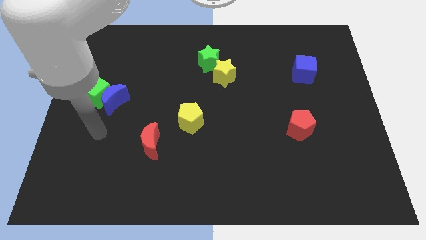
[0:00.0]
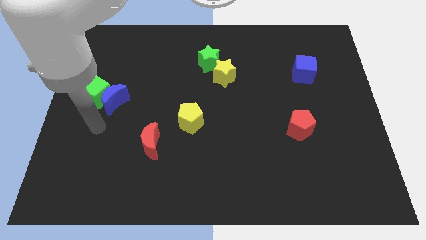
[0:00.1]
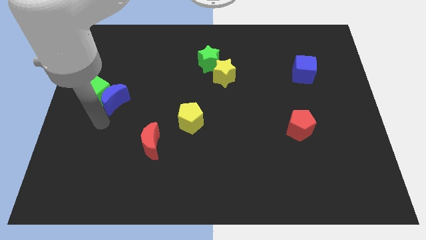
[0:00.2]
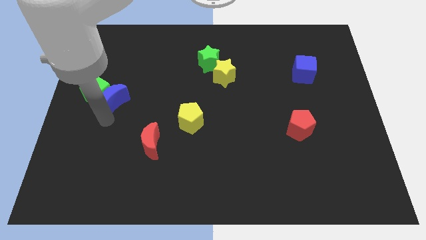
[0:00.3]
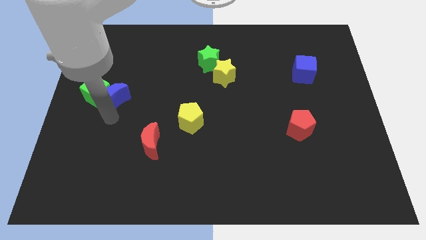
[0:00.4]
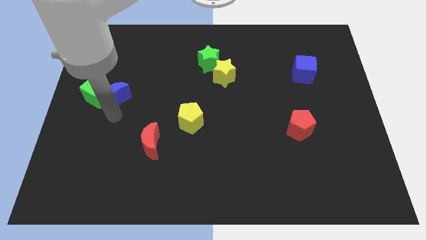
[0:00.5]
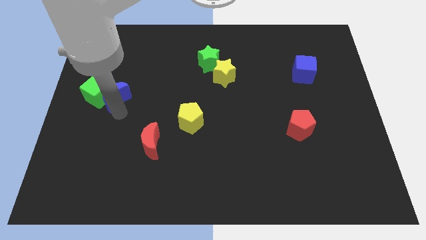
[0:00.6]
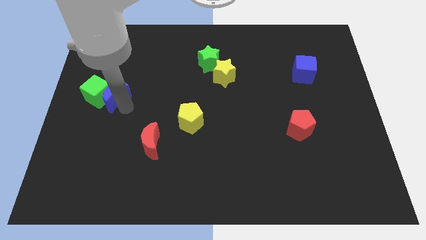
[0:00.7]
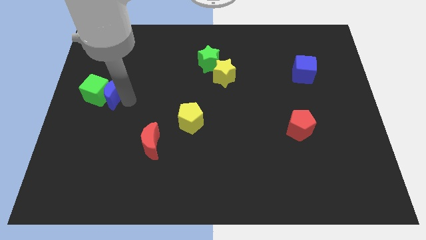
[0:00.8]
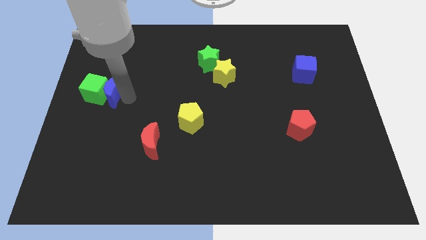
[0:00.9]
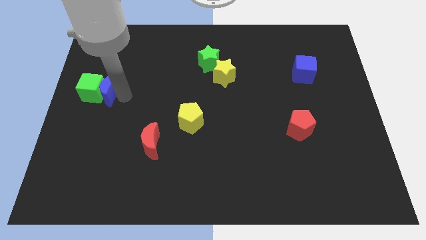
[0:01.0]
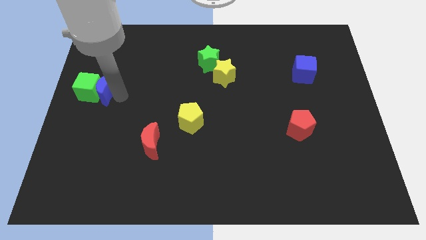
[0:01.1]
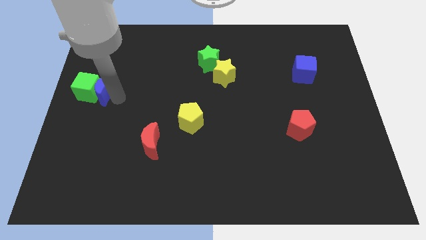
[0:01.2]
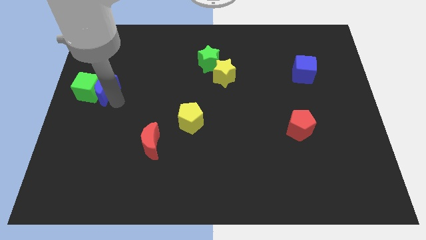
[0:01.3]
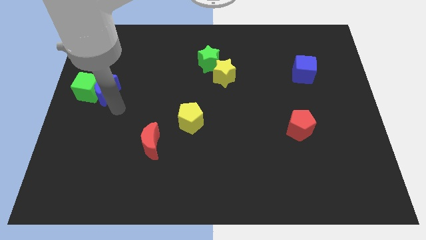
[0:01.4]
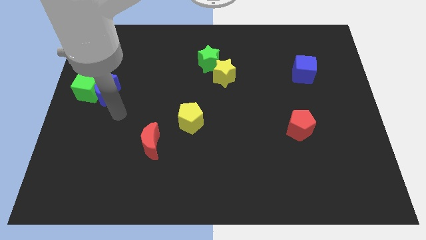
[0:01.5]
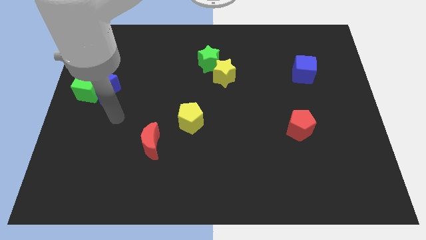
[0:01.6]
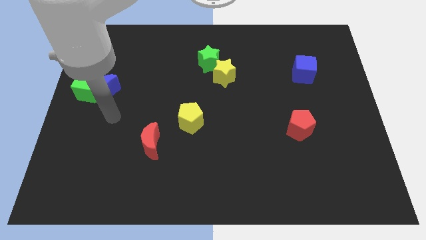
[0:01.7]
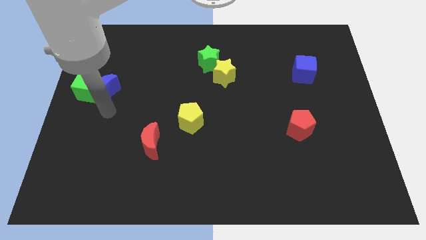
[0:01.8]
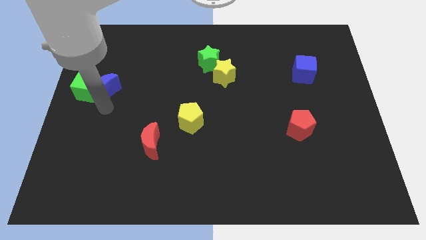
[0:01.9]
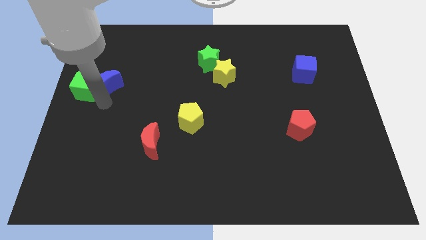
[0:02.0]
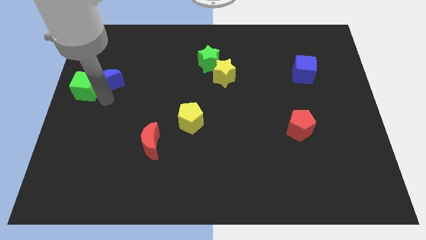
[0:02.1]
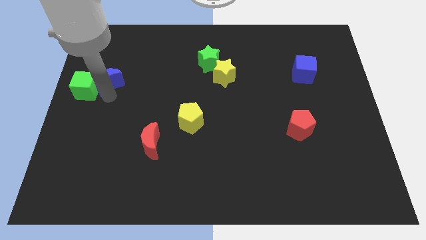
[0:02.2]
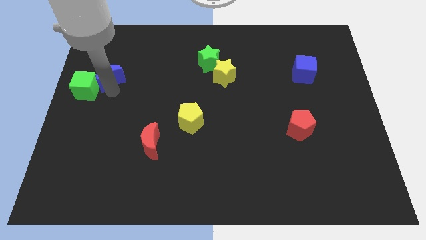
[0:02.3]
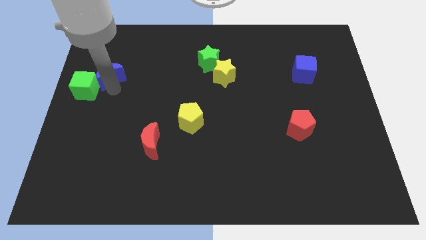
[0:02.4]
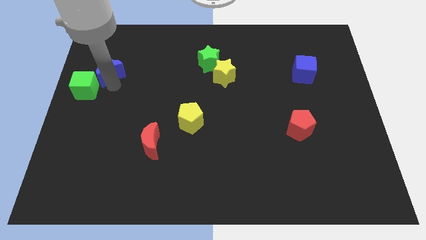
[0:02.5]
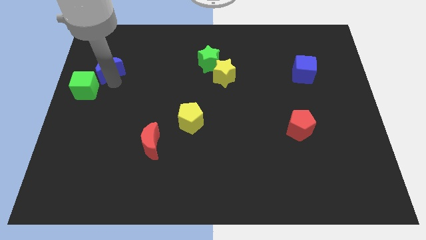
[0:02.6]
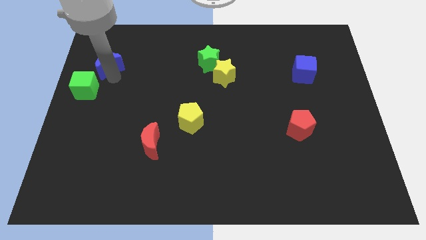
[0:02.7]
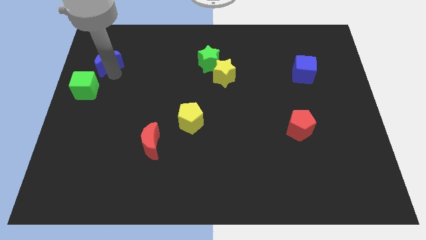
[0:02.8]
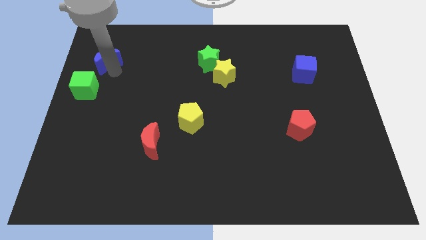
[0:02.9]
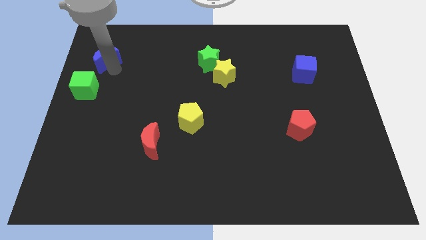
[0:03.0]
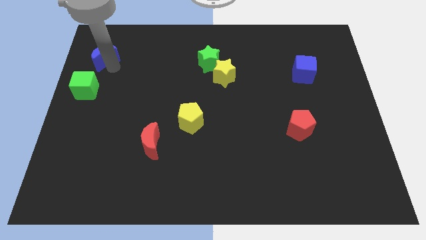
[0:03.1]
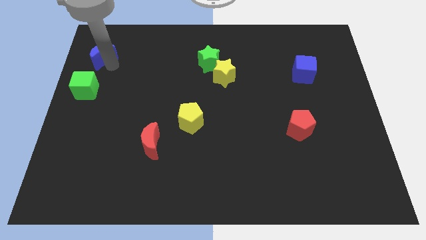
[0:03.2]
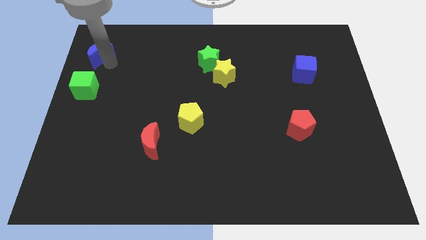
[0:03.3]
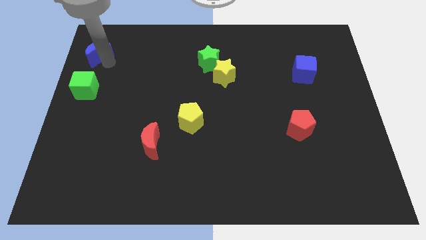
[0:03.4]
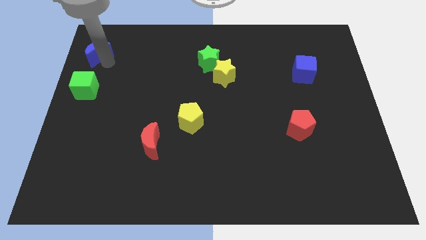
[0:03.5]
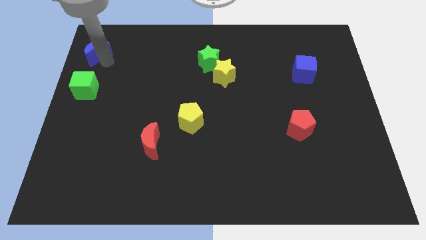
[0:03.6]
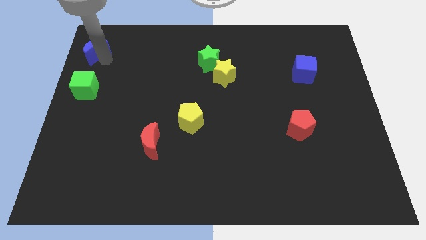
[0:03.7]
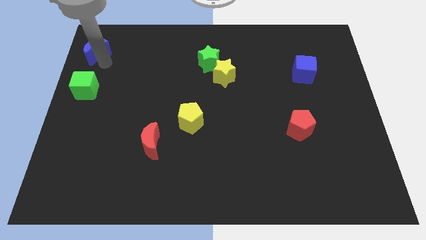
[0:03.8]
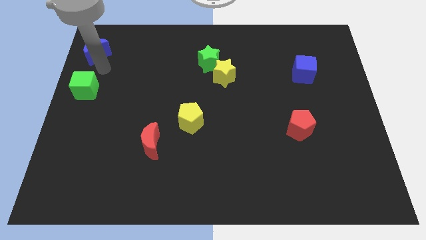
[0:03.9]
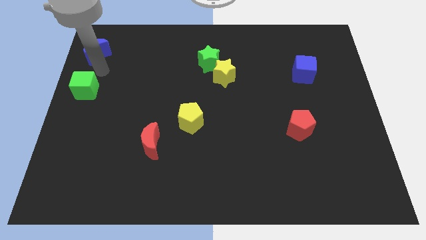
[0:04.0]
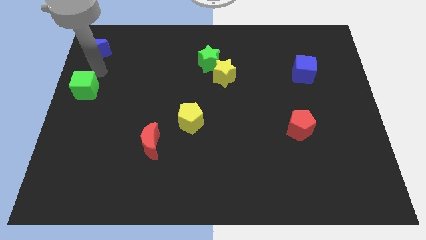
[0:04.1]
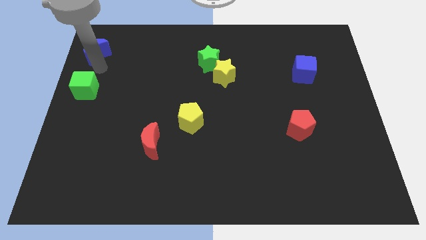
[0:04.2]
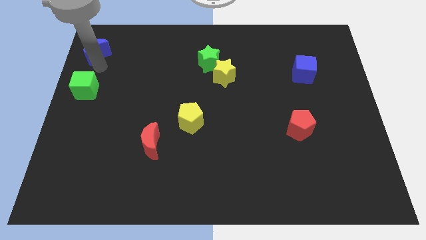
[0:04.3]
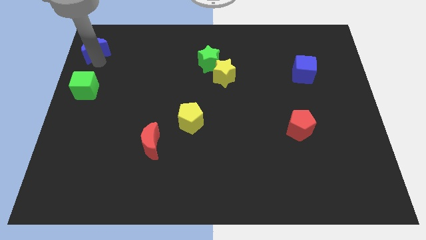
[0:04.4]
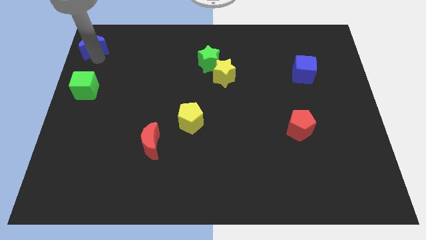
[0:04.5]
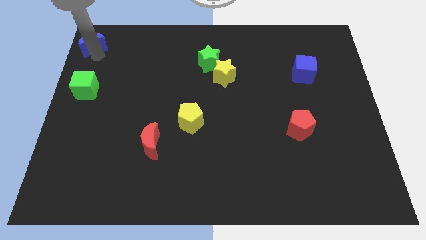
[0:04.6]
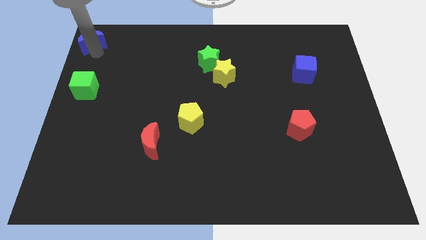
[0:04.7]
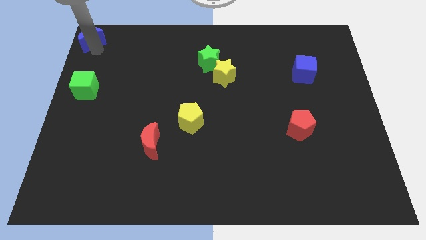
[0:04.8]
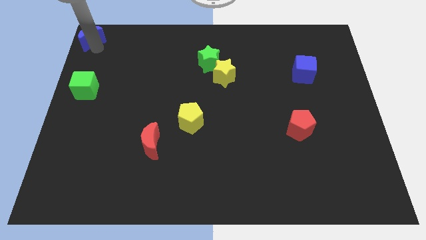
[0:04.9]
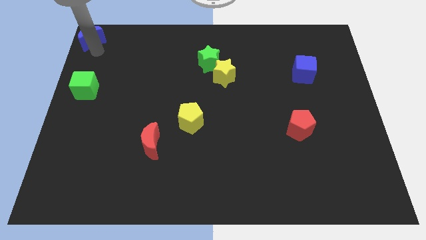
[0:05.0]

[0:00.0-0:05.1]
place the blue moon above the green cube

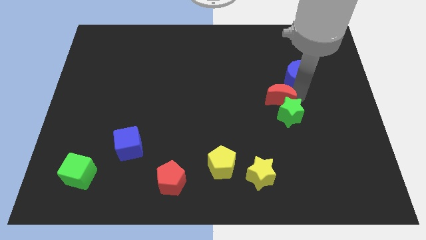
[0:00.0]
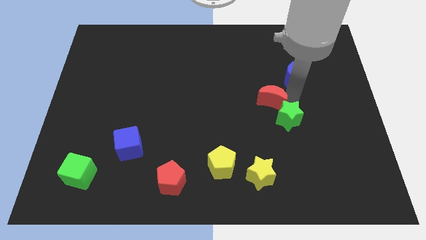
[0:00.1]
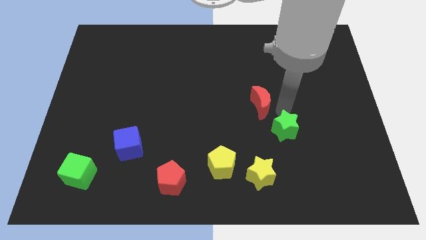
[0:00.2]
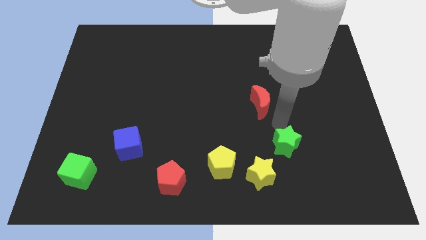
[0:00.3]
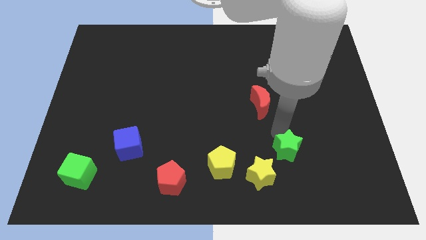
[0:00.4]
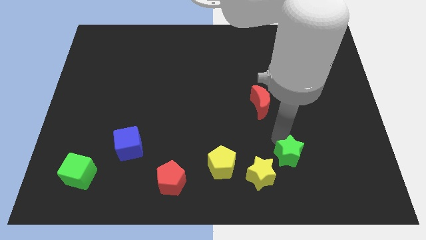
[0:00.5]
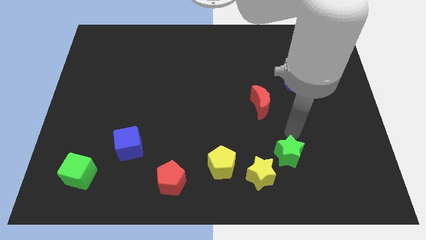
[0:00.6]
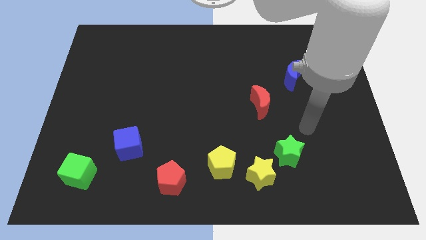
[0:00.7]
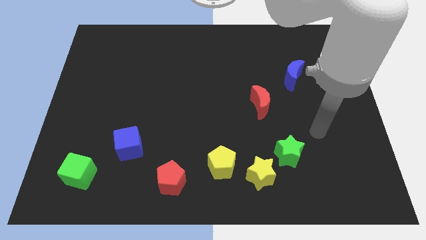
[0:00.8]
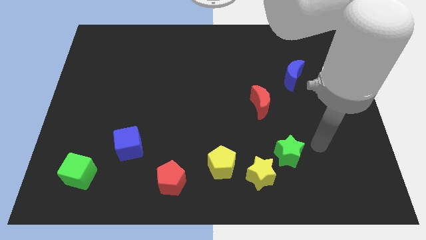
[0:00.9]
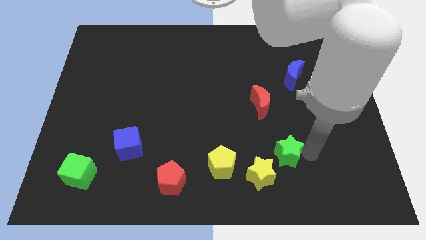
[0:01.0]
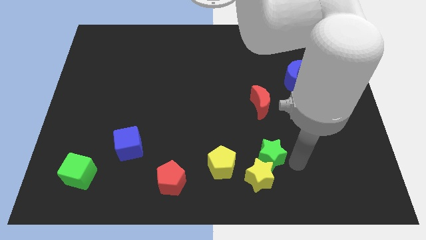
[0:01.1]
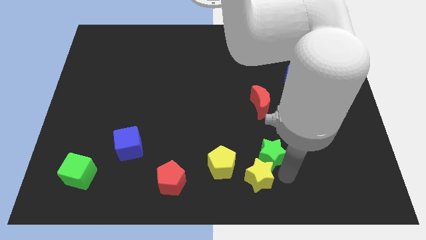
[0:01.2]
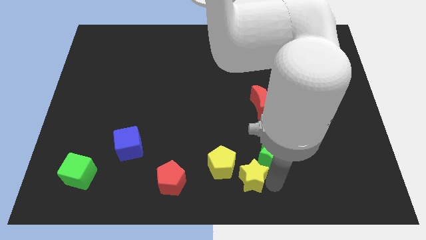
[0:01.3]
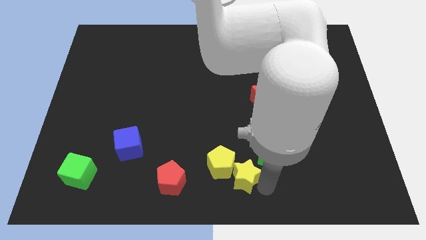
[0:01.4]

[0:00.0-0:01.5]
move green star close to yellow star

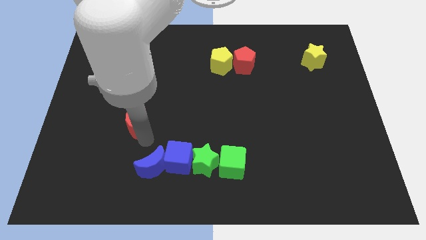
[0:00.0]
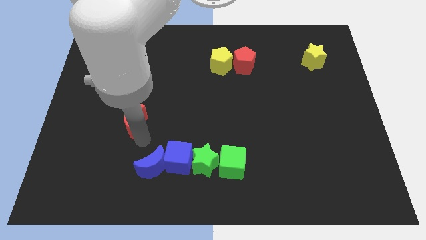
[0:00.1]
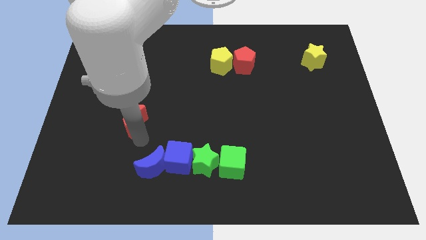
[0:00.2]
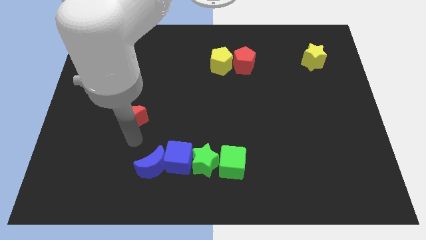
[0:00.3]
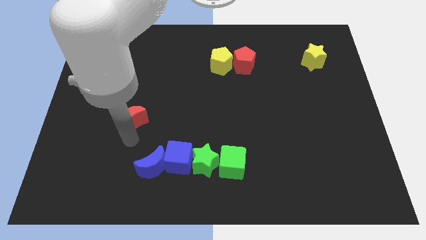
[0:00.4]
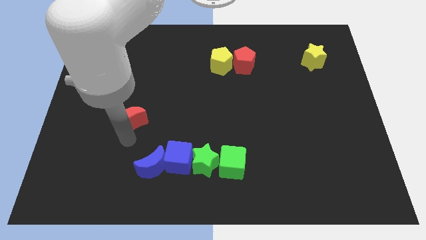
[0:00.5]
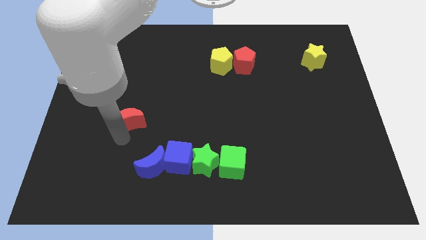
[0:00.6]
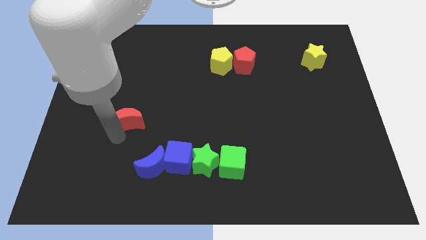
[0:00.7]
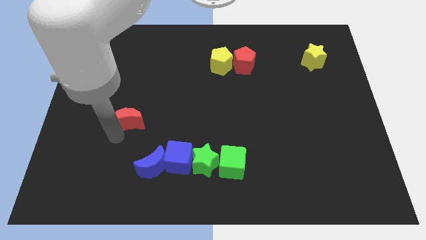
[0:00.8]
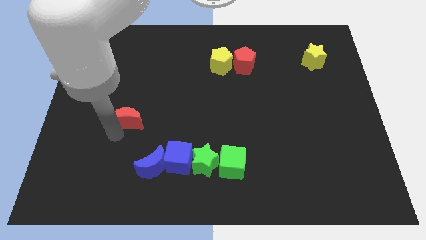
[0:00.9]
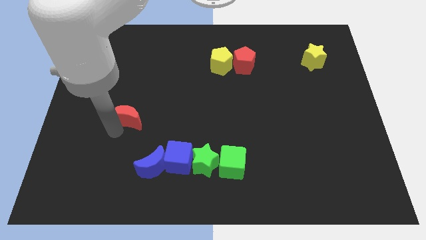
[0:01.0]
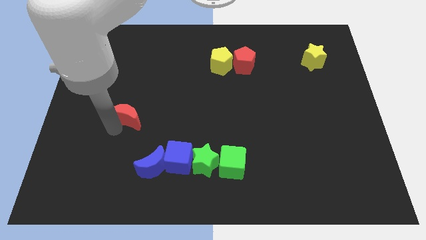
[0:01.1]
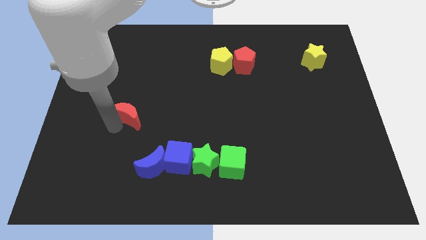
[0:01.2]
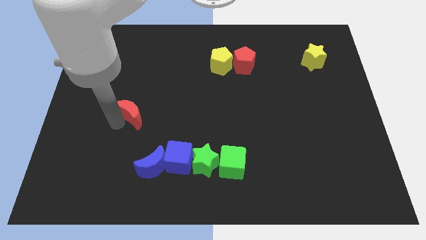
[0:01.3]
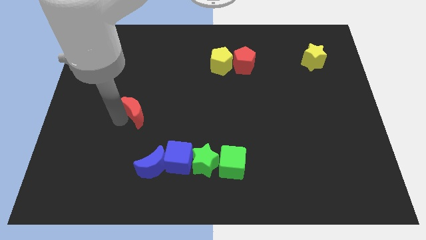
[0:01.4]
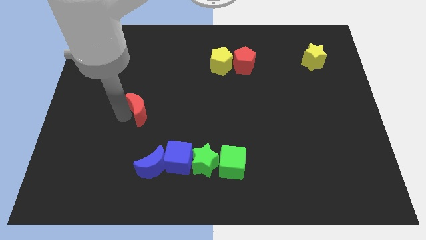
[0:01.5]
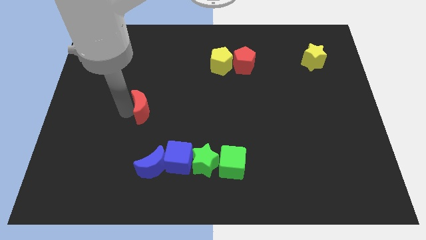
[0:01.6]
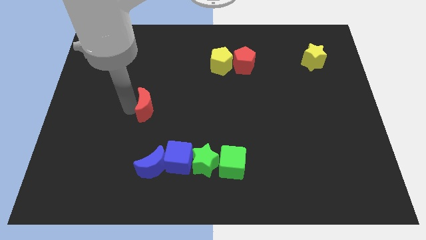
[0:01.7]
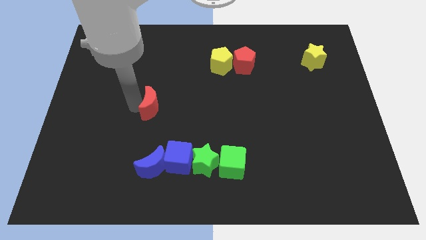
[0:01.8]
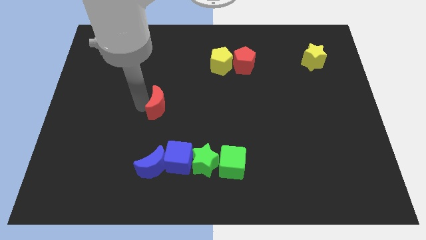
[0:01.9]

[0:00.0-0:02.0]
place the red crescent above to the blue crescent

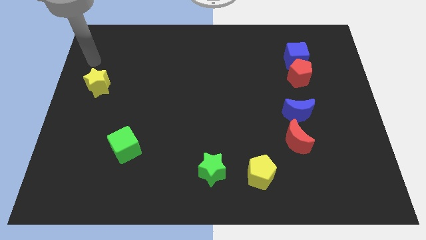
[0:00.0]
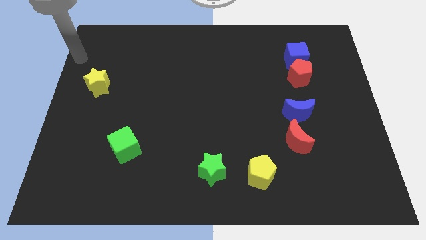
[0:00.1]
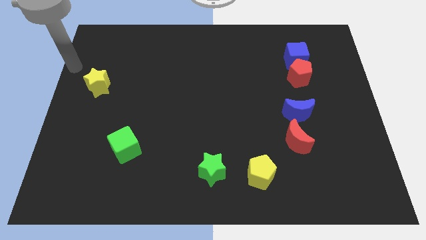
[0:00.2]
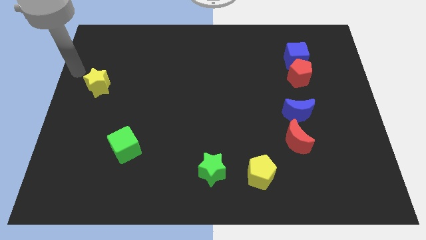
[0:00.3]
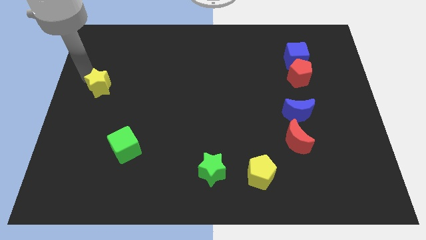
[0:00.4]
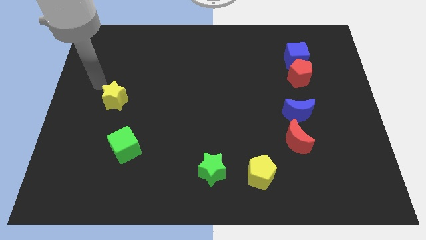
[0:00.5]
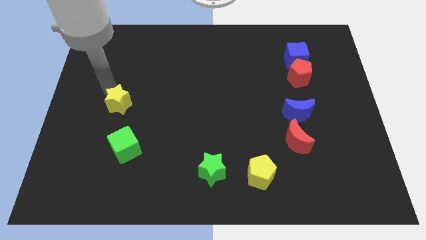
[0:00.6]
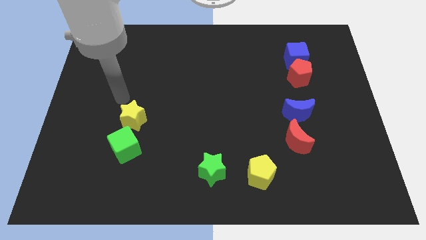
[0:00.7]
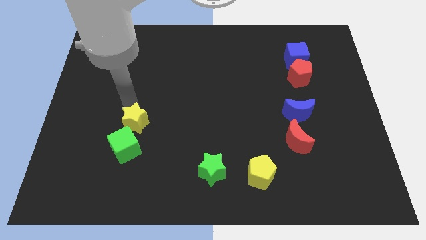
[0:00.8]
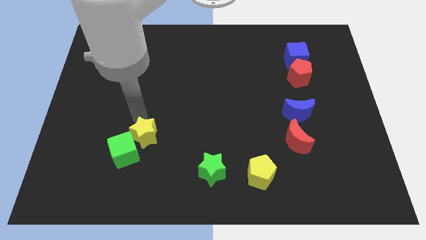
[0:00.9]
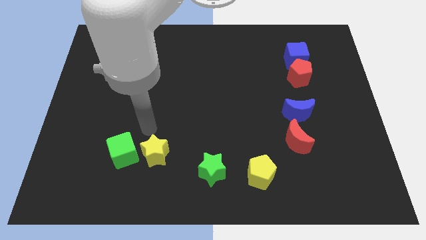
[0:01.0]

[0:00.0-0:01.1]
place yellow star beside green cube
